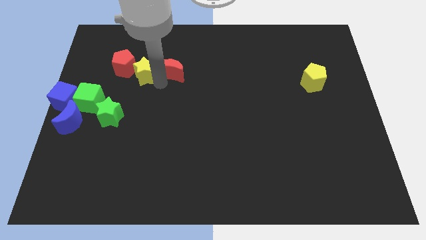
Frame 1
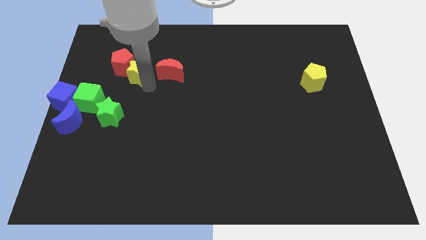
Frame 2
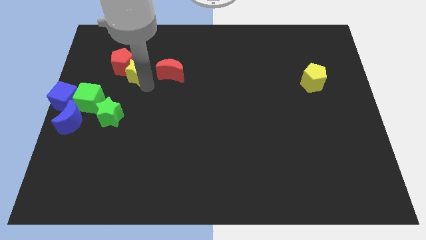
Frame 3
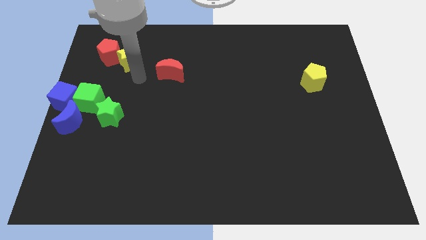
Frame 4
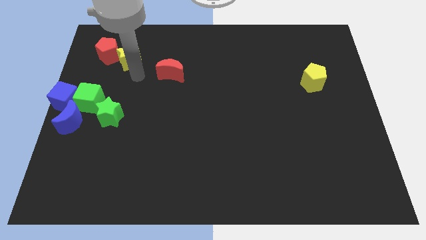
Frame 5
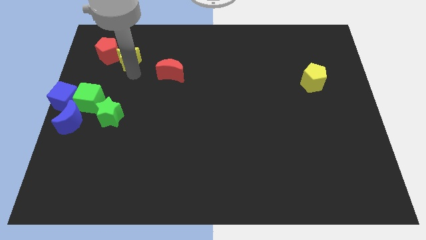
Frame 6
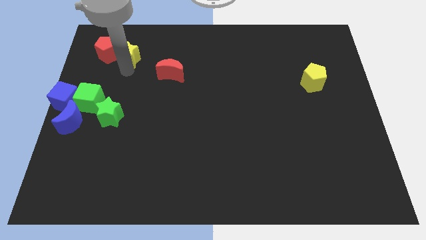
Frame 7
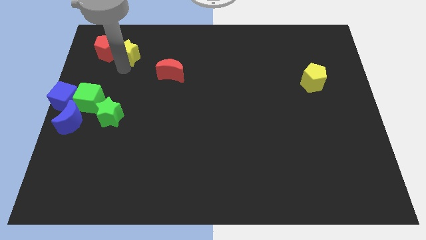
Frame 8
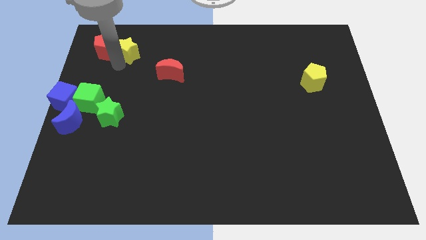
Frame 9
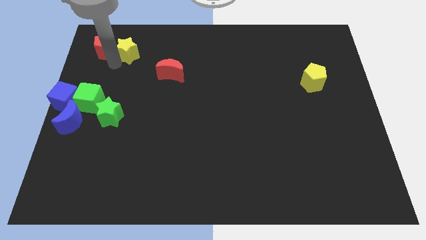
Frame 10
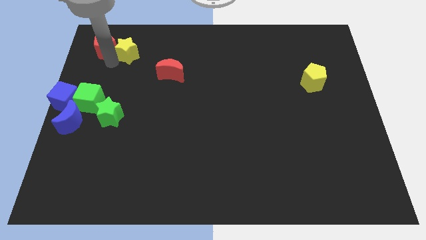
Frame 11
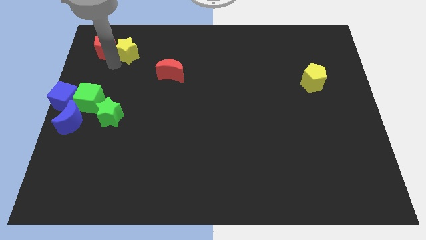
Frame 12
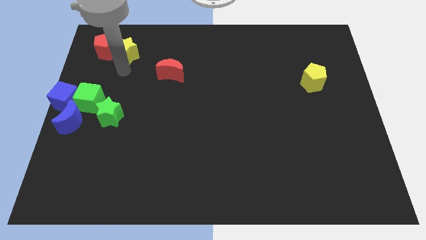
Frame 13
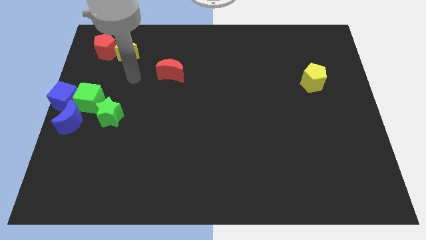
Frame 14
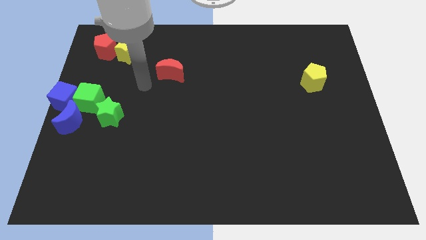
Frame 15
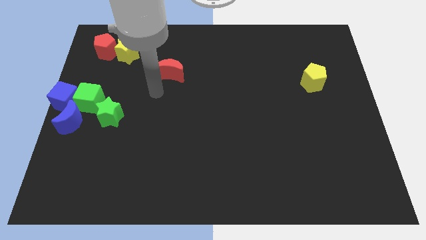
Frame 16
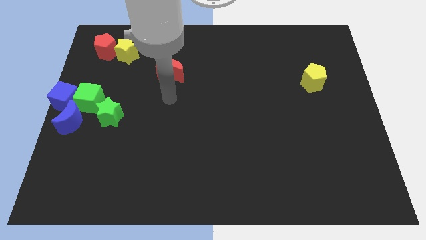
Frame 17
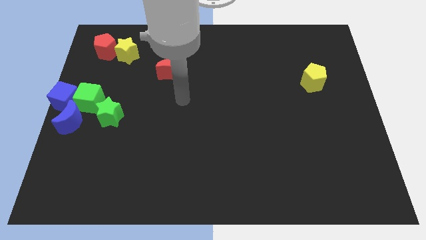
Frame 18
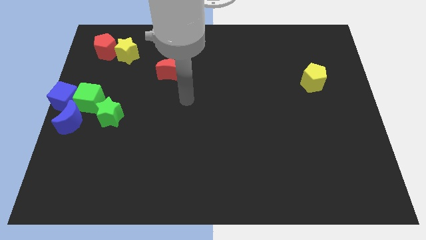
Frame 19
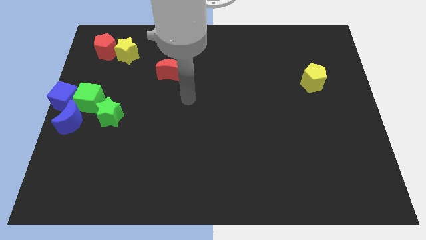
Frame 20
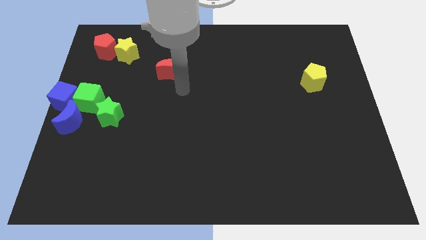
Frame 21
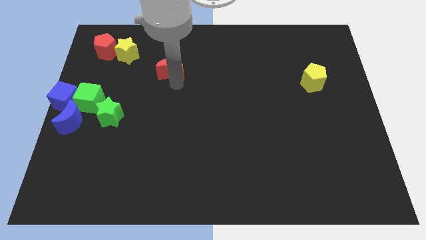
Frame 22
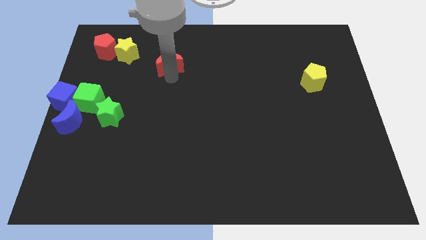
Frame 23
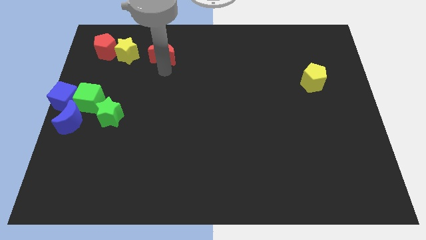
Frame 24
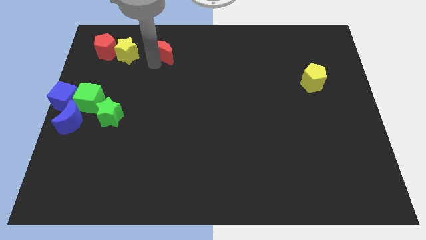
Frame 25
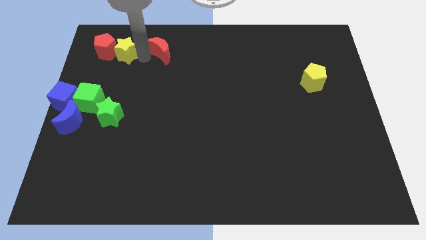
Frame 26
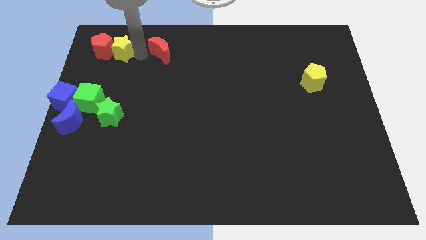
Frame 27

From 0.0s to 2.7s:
push the red blocks and yellow pentagon to the top left

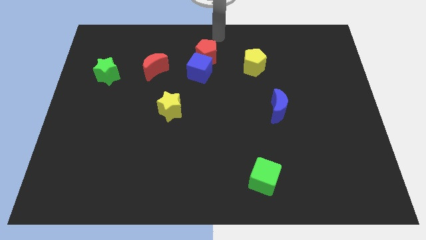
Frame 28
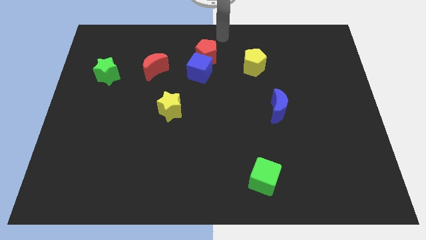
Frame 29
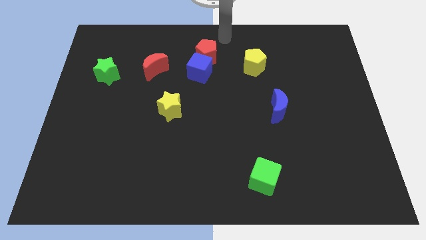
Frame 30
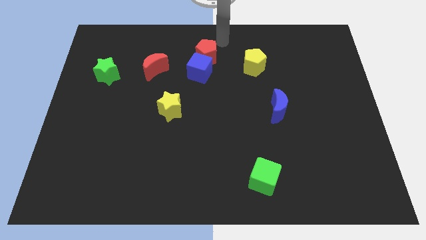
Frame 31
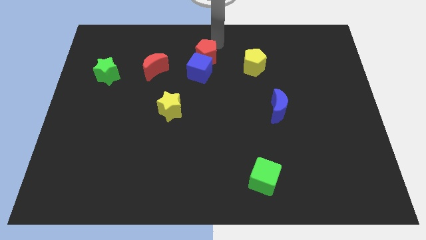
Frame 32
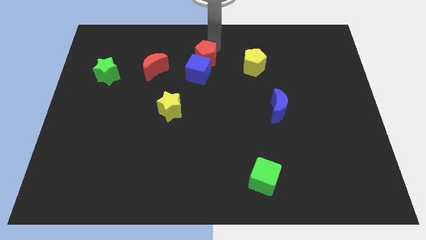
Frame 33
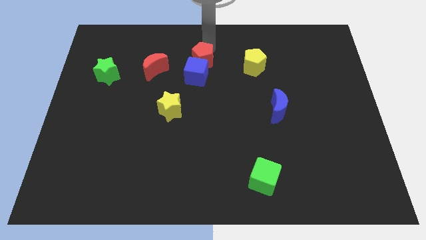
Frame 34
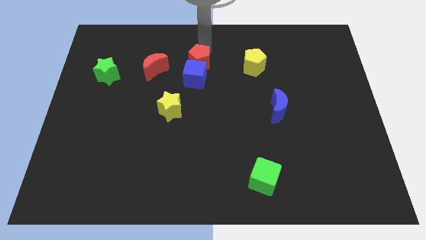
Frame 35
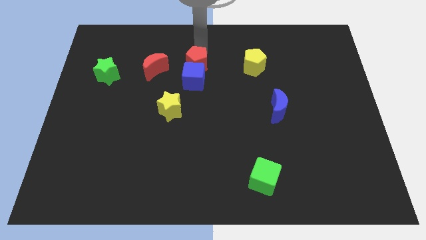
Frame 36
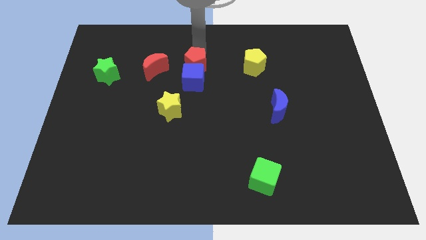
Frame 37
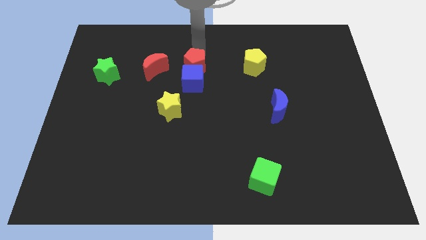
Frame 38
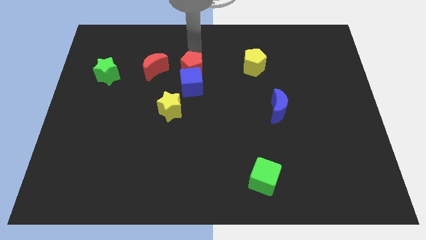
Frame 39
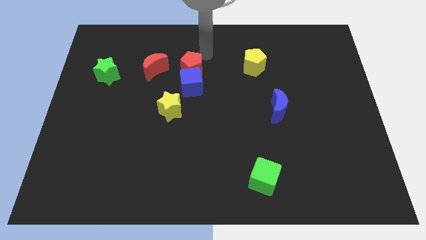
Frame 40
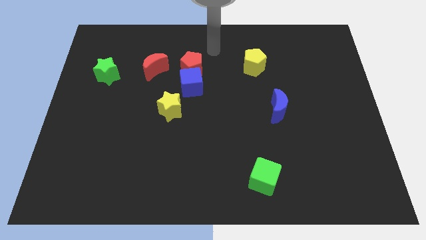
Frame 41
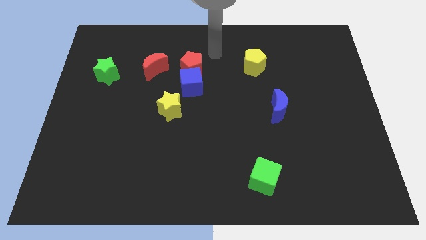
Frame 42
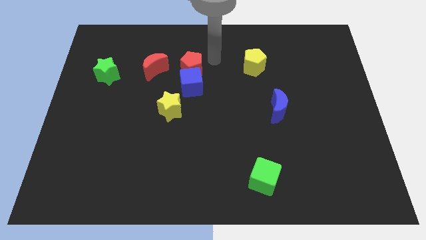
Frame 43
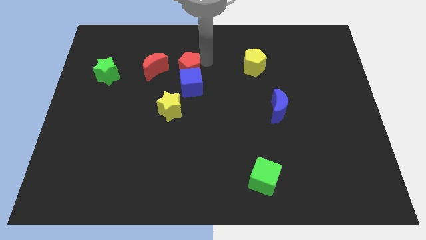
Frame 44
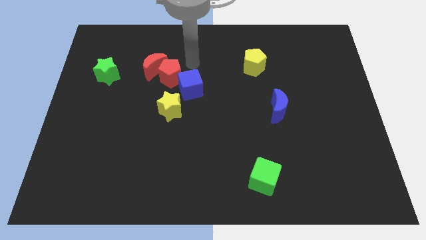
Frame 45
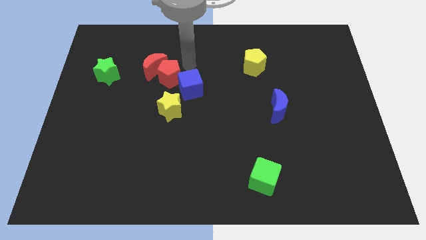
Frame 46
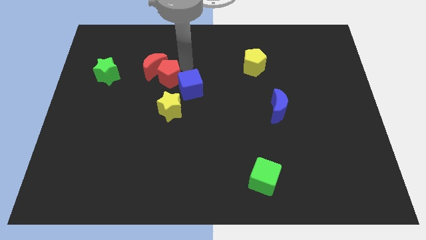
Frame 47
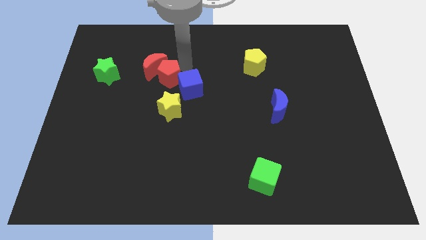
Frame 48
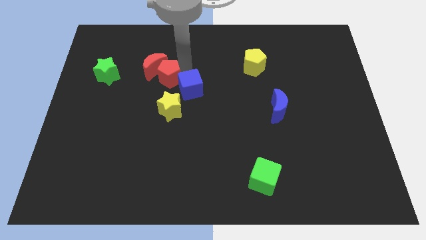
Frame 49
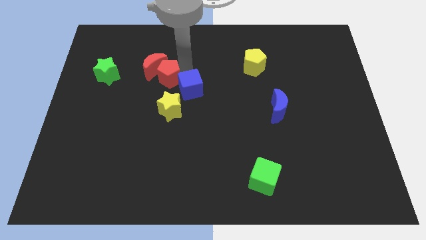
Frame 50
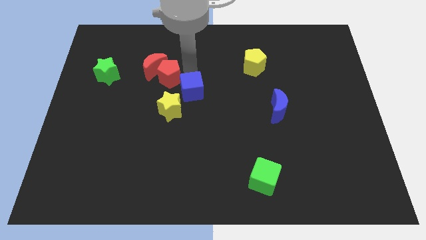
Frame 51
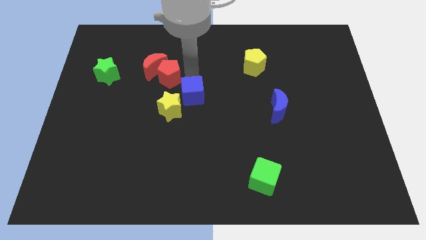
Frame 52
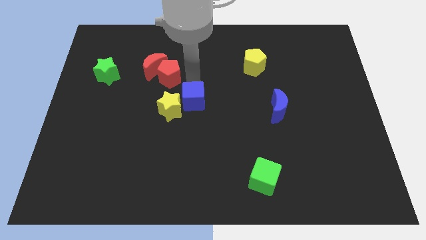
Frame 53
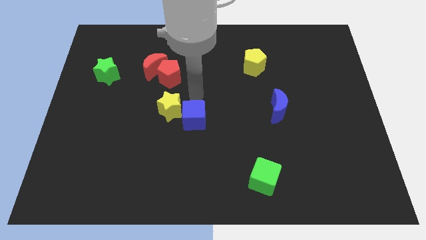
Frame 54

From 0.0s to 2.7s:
place the blue cube right to the yellow star

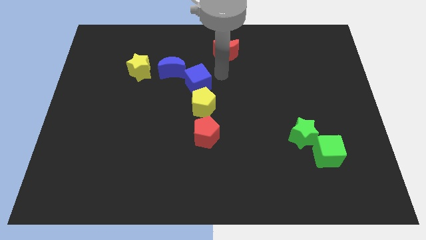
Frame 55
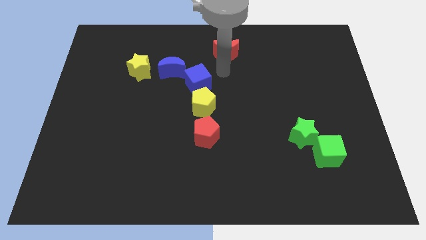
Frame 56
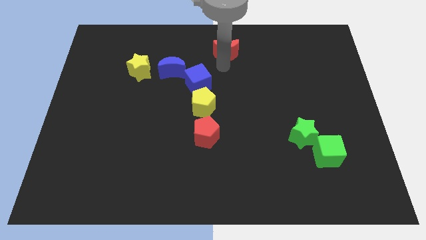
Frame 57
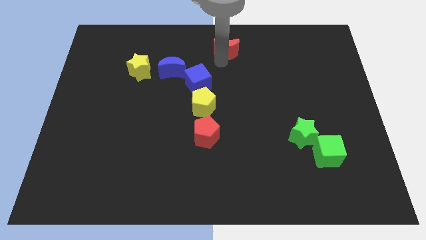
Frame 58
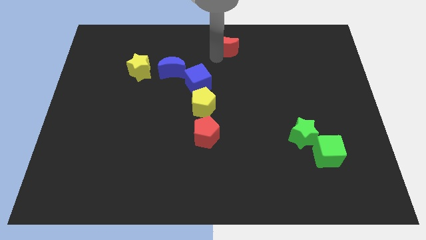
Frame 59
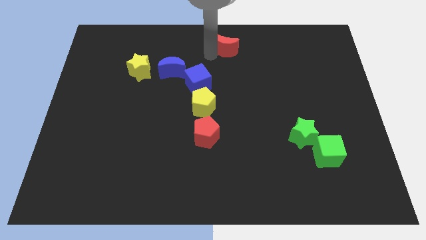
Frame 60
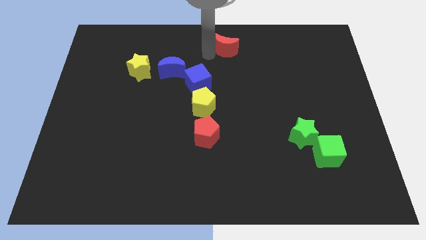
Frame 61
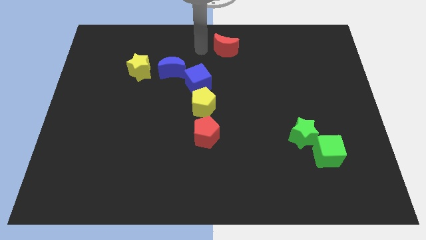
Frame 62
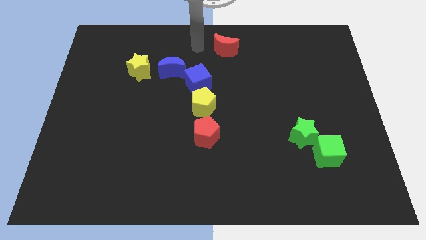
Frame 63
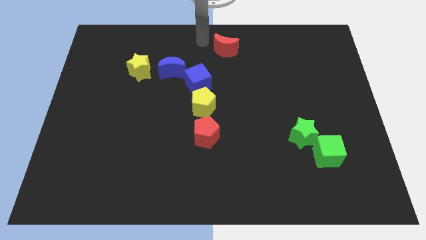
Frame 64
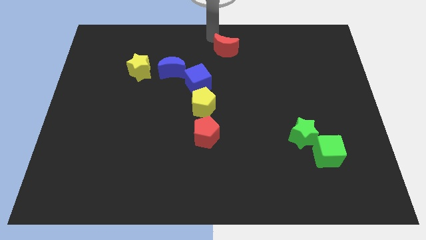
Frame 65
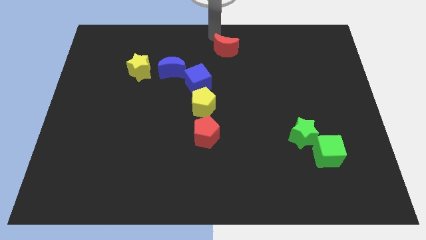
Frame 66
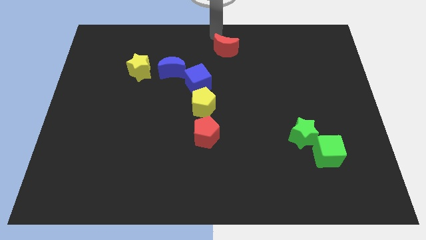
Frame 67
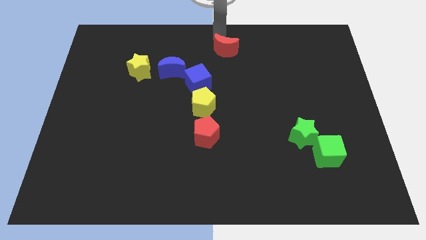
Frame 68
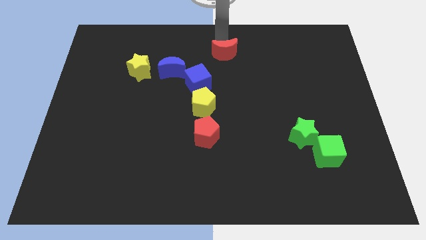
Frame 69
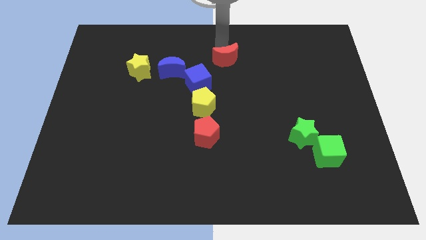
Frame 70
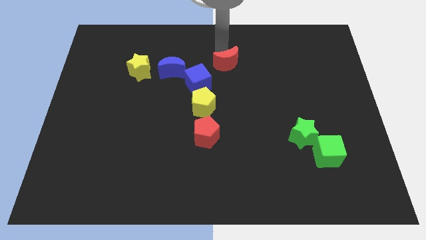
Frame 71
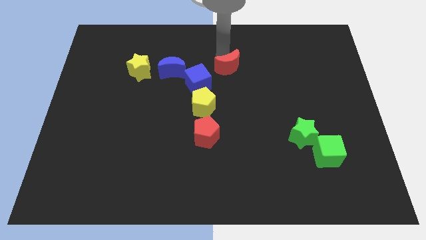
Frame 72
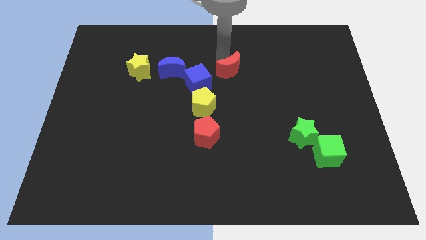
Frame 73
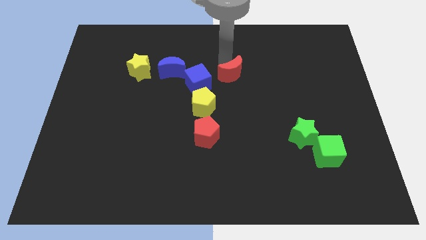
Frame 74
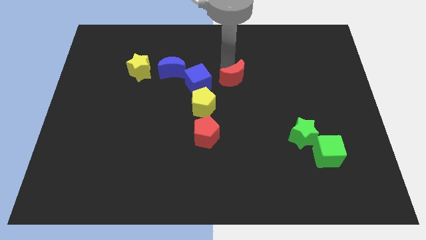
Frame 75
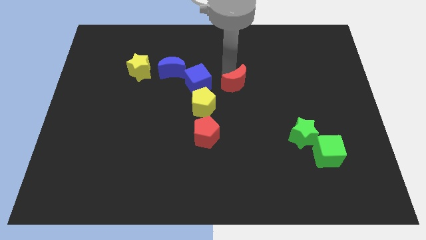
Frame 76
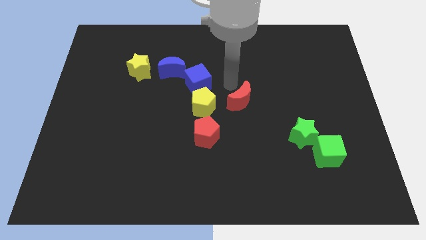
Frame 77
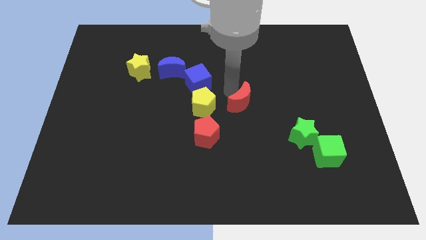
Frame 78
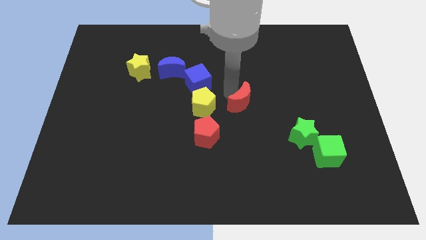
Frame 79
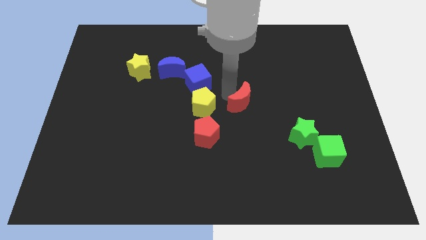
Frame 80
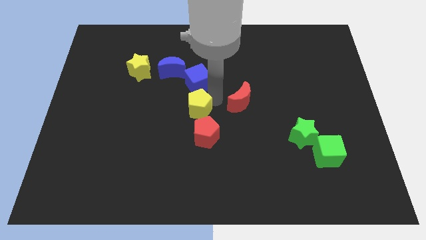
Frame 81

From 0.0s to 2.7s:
place red moon parallel to yellow pentagon

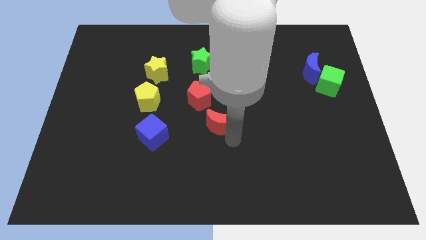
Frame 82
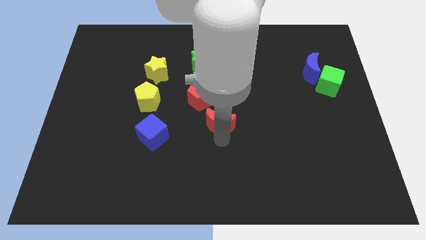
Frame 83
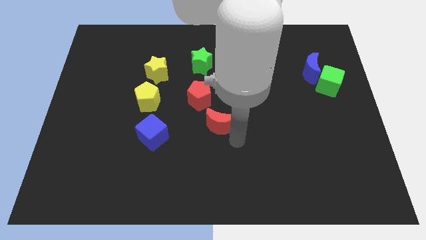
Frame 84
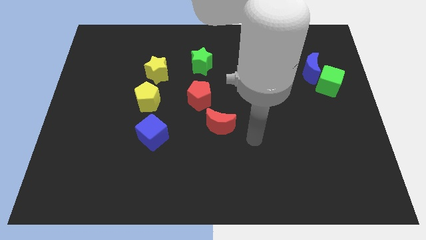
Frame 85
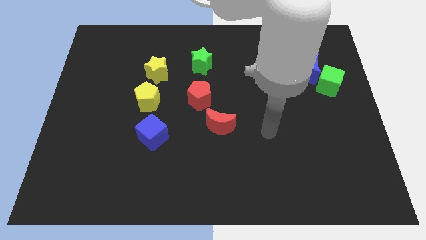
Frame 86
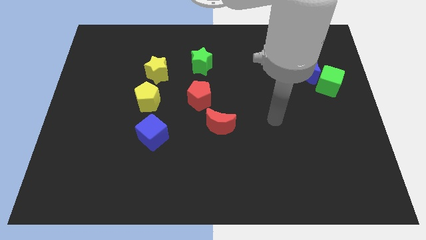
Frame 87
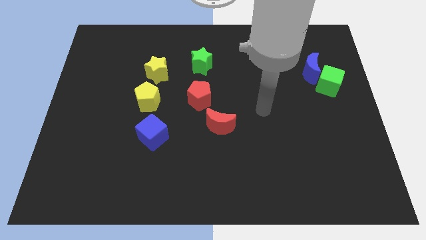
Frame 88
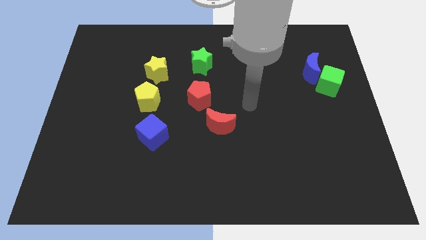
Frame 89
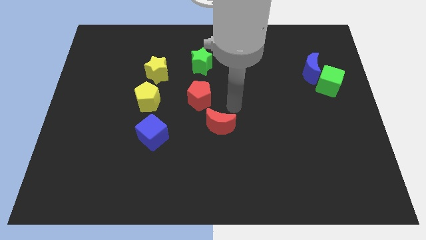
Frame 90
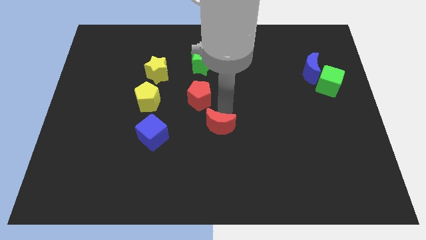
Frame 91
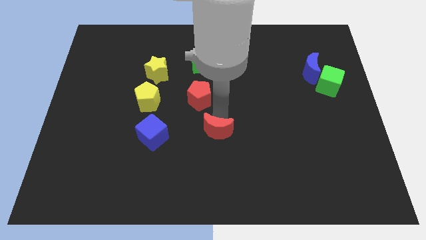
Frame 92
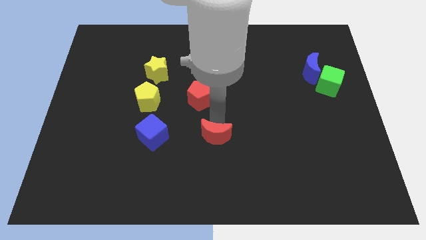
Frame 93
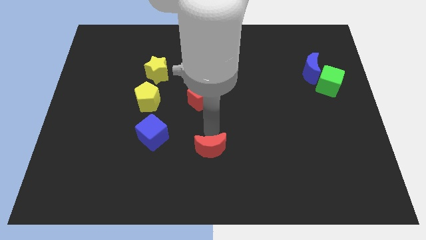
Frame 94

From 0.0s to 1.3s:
put the red moon right to the blue cube
